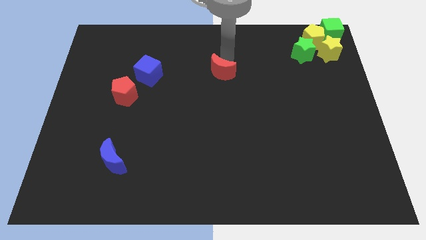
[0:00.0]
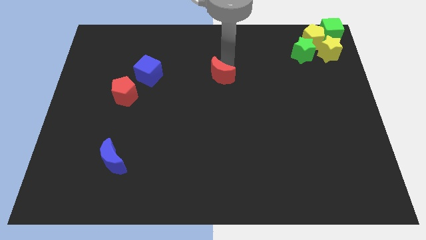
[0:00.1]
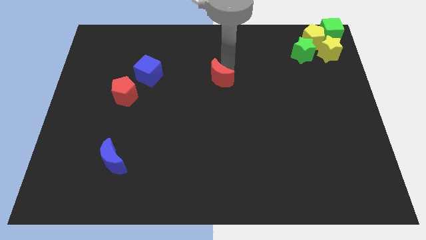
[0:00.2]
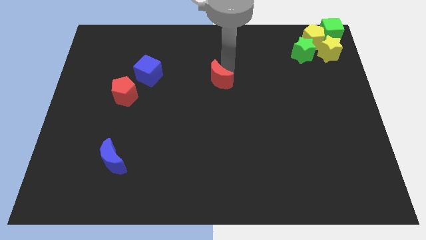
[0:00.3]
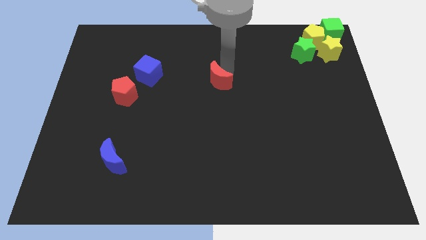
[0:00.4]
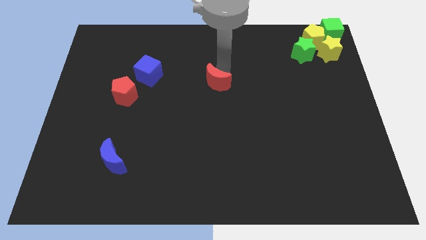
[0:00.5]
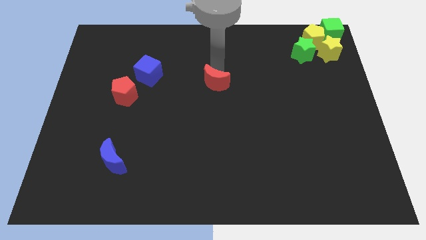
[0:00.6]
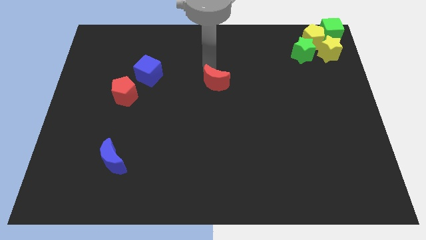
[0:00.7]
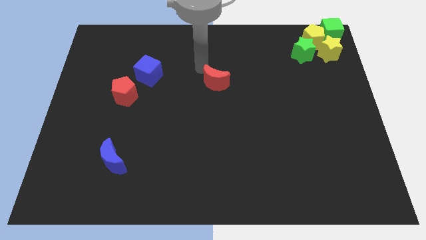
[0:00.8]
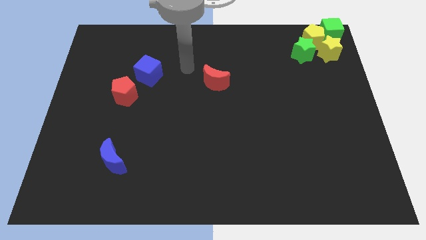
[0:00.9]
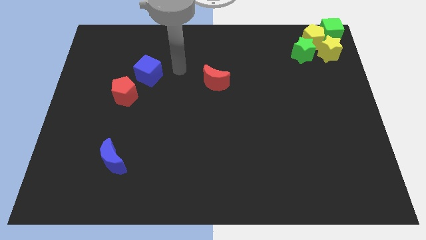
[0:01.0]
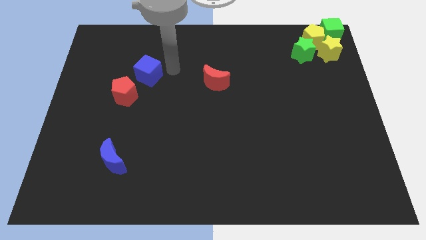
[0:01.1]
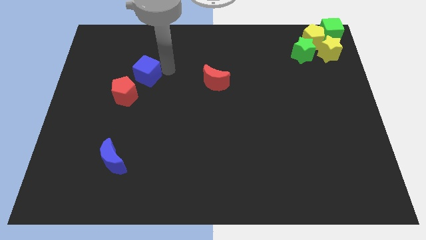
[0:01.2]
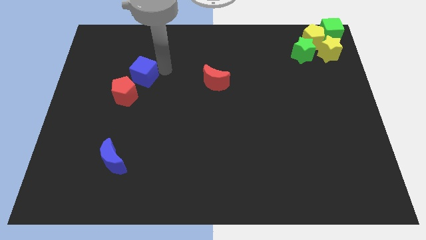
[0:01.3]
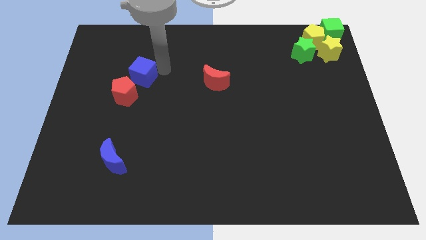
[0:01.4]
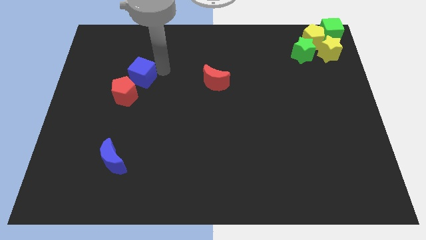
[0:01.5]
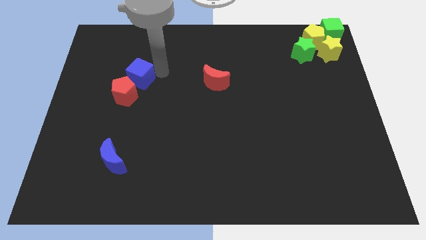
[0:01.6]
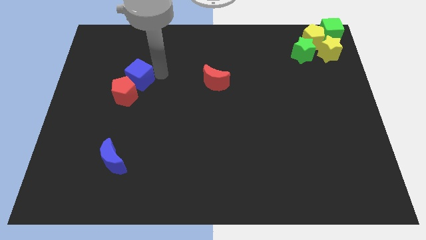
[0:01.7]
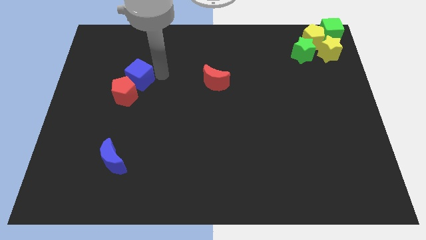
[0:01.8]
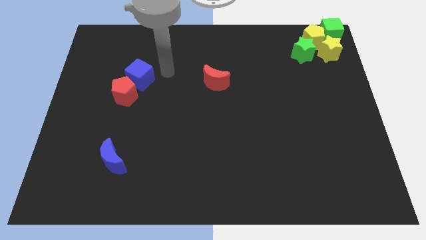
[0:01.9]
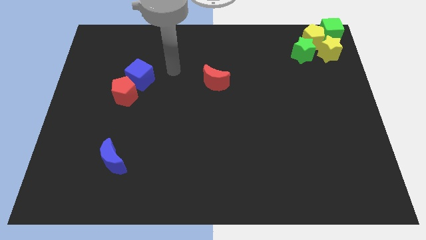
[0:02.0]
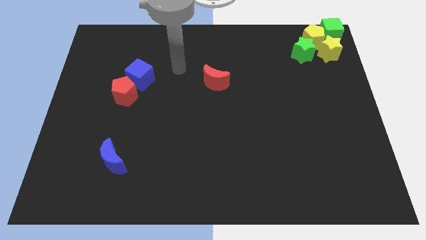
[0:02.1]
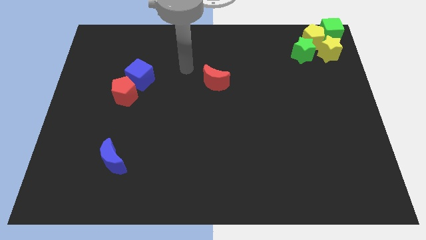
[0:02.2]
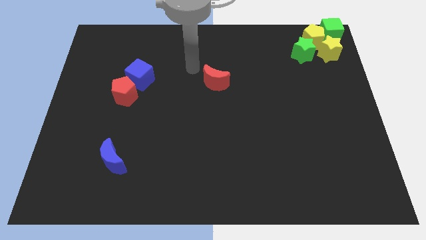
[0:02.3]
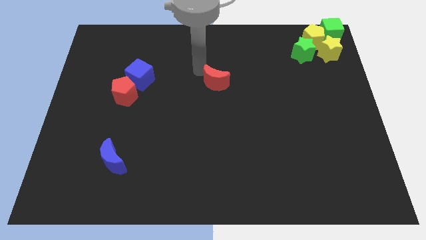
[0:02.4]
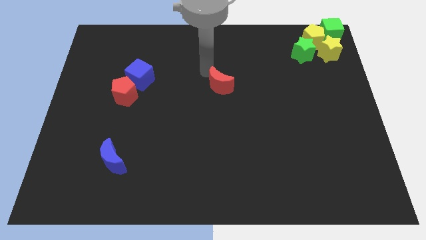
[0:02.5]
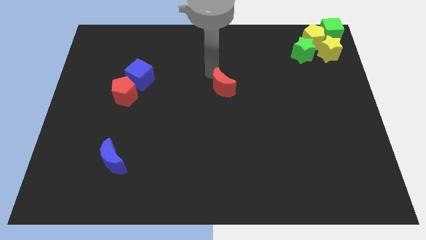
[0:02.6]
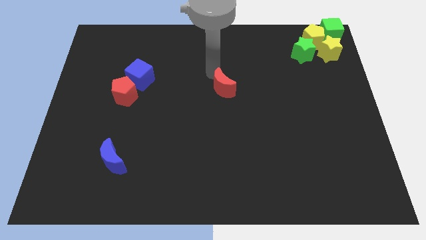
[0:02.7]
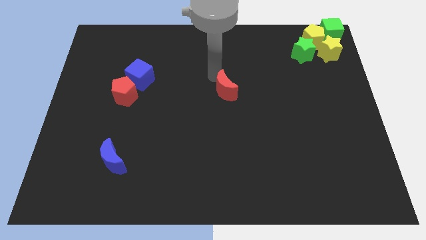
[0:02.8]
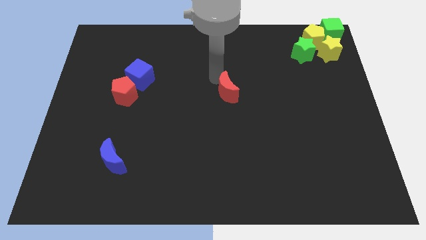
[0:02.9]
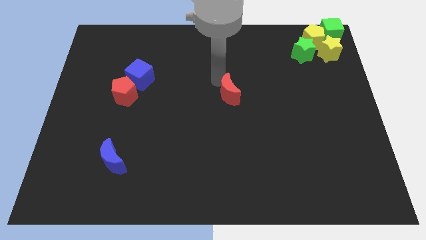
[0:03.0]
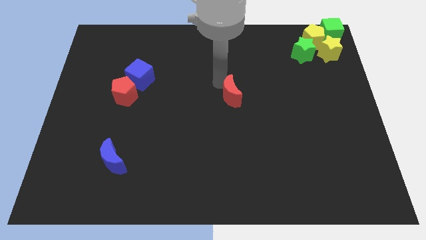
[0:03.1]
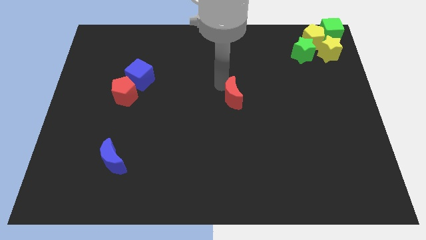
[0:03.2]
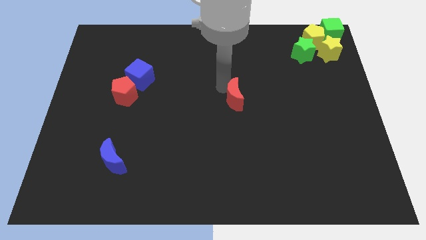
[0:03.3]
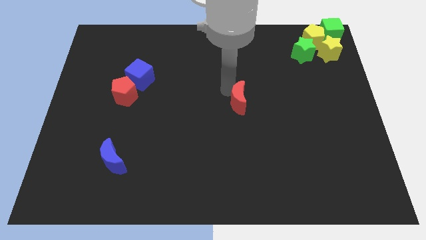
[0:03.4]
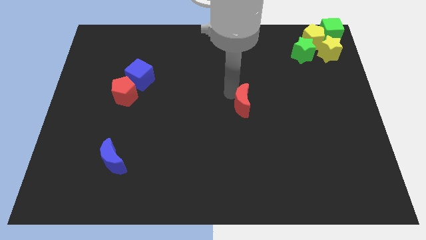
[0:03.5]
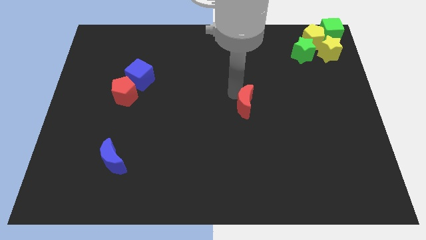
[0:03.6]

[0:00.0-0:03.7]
push the red moon to the center

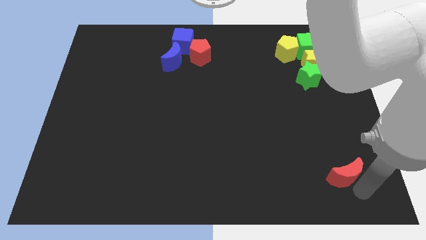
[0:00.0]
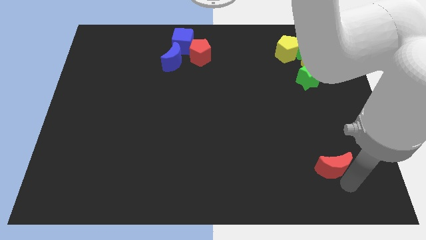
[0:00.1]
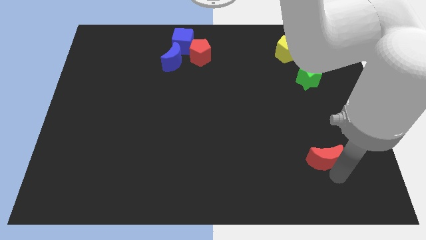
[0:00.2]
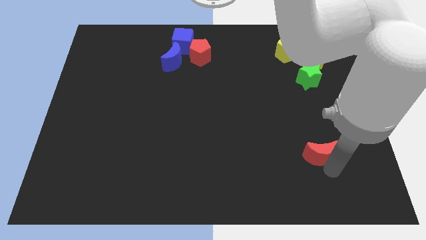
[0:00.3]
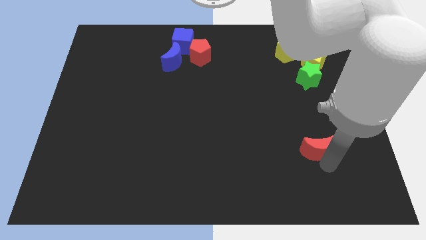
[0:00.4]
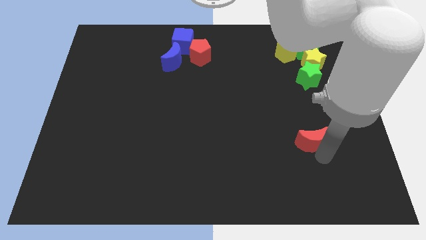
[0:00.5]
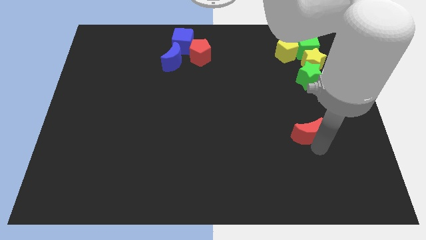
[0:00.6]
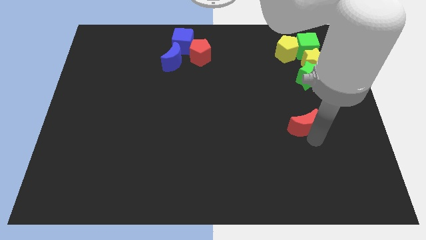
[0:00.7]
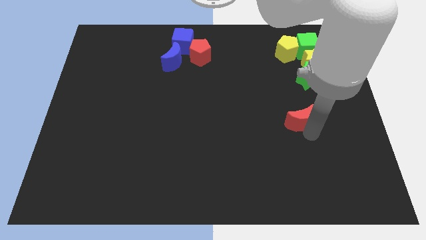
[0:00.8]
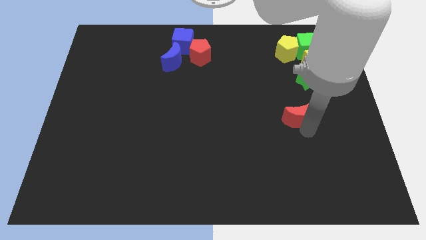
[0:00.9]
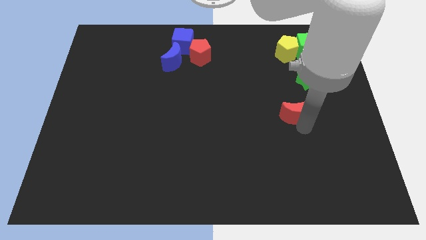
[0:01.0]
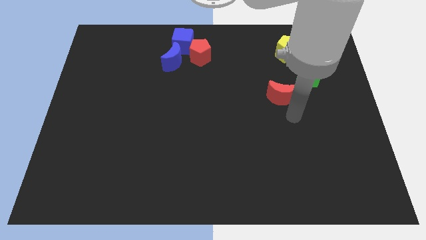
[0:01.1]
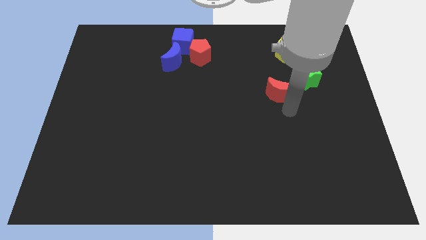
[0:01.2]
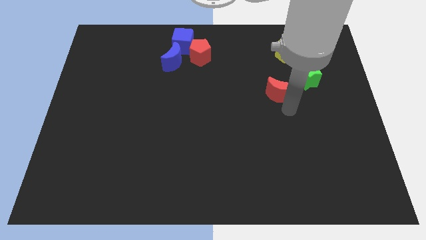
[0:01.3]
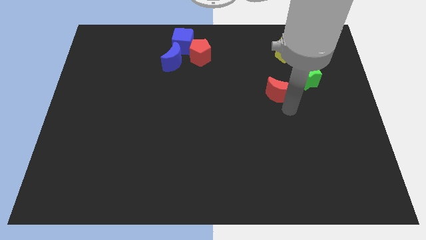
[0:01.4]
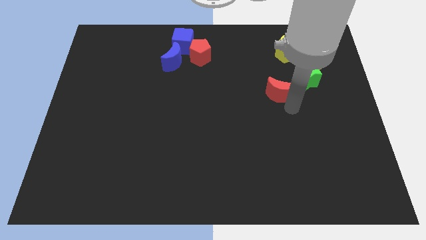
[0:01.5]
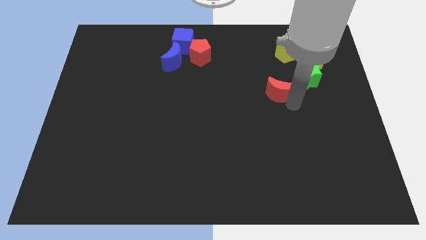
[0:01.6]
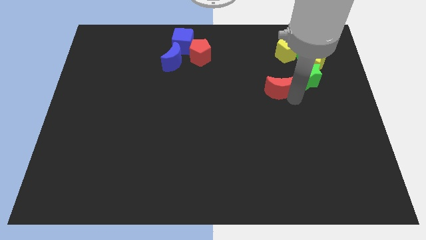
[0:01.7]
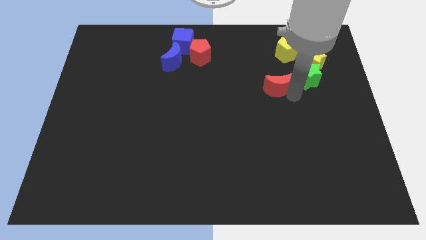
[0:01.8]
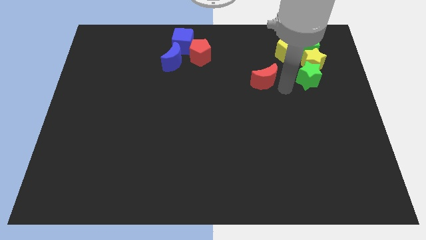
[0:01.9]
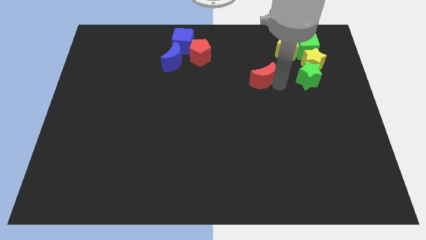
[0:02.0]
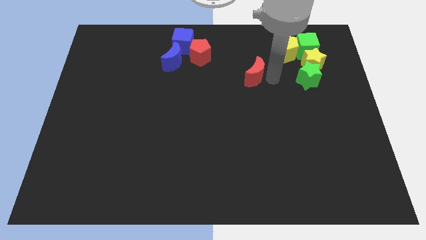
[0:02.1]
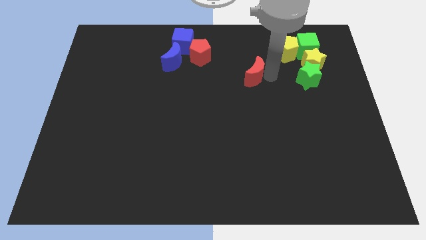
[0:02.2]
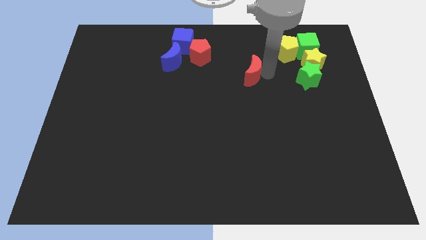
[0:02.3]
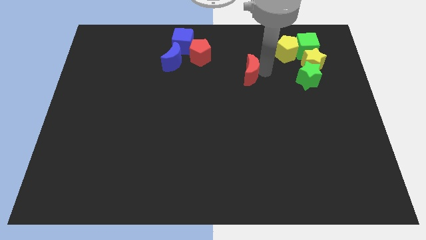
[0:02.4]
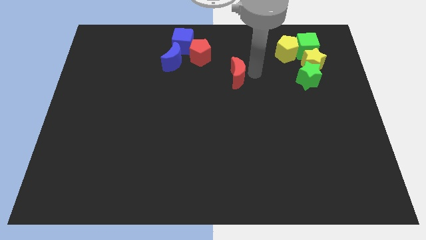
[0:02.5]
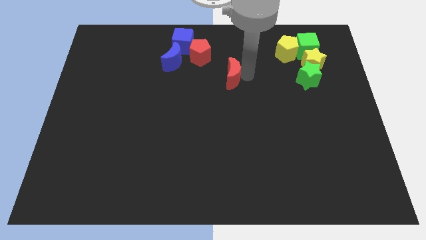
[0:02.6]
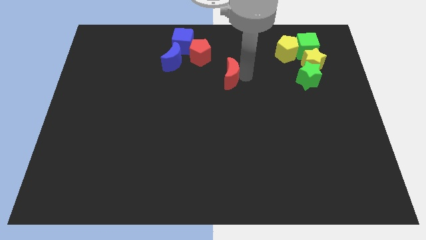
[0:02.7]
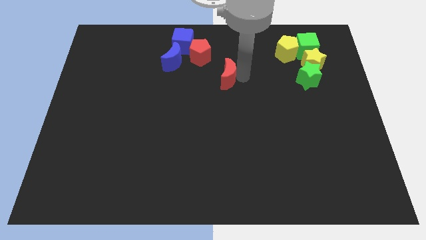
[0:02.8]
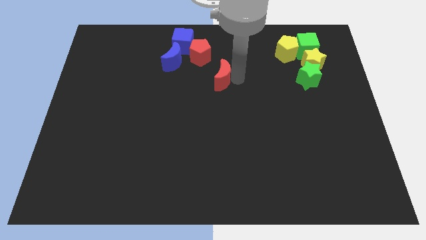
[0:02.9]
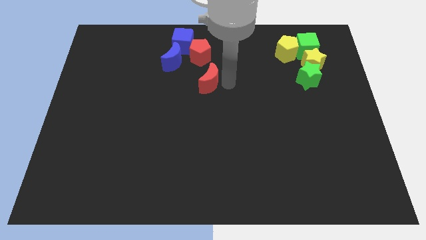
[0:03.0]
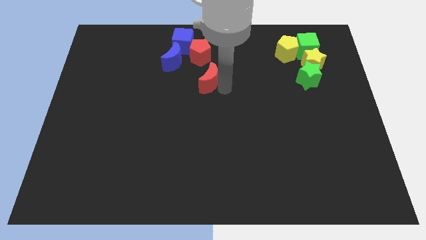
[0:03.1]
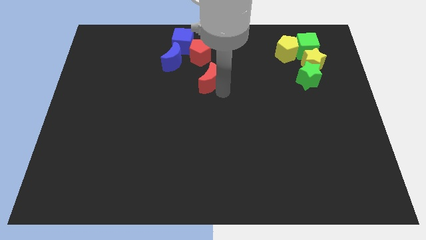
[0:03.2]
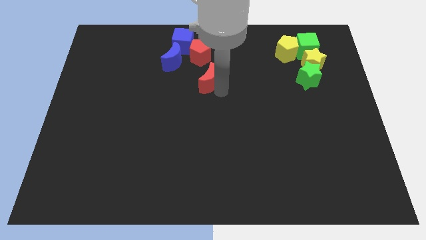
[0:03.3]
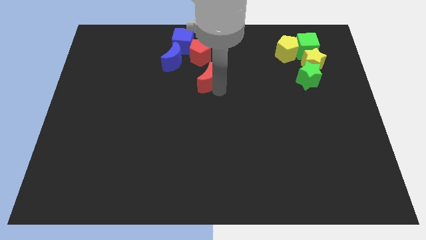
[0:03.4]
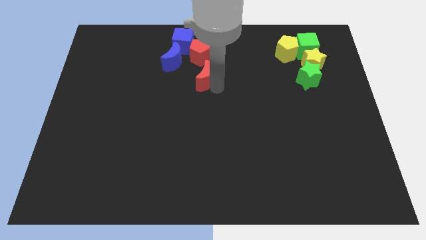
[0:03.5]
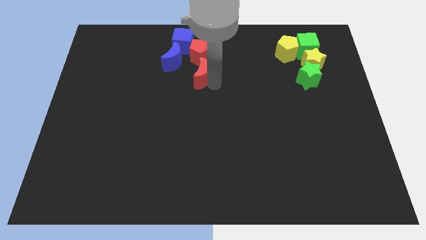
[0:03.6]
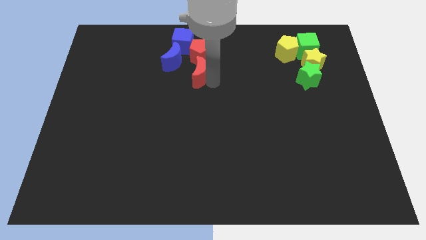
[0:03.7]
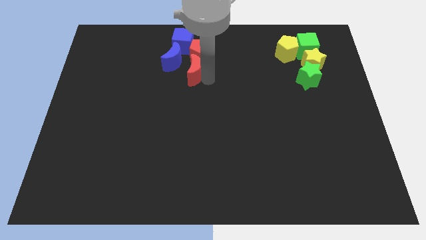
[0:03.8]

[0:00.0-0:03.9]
push the red moon below the red pentagon

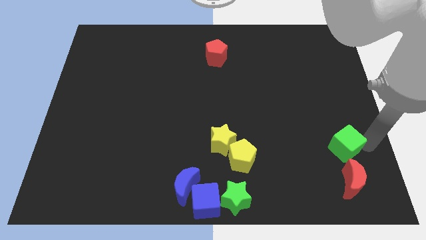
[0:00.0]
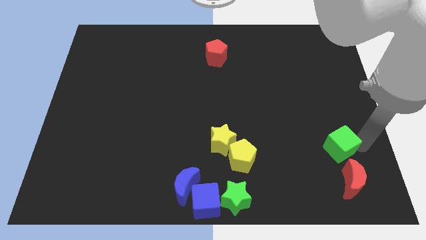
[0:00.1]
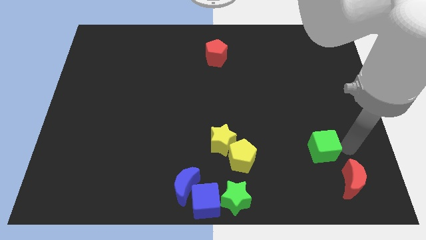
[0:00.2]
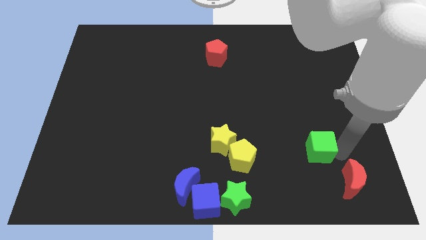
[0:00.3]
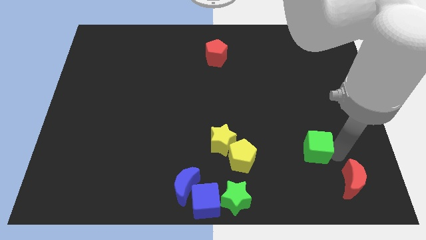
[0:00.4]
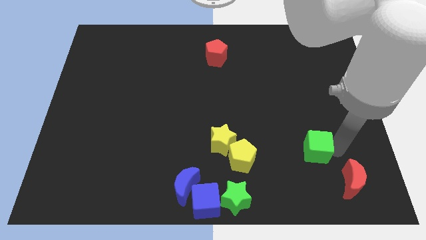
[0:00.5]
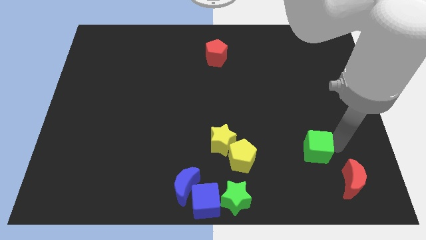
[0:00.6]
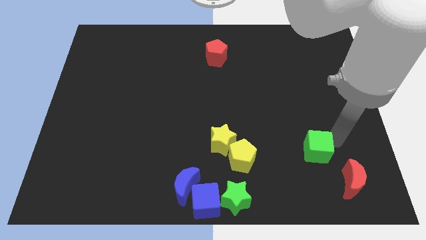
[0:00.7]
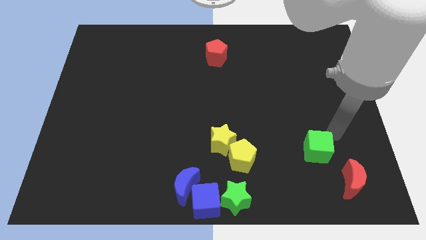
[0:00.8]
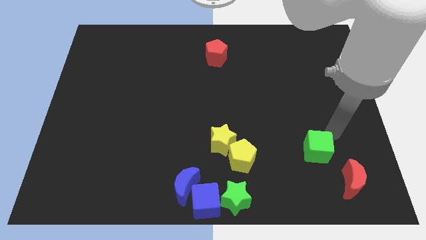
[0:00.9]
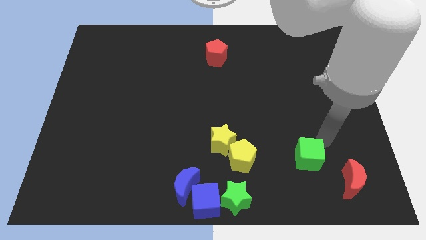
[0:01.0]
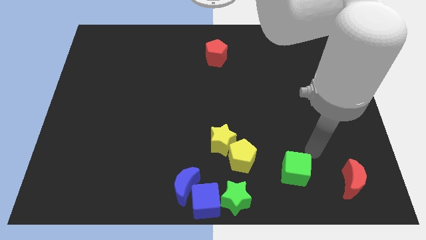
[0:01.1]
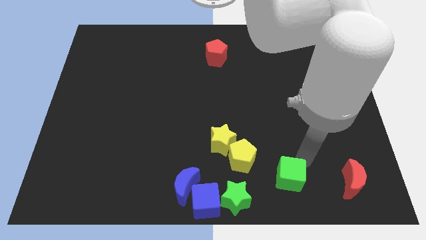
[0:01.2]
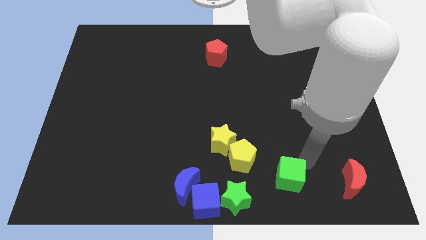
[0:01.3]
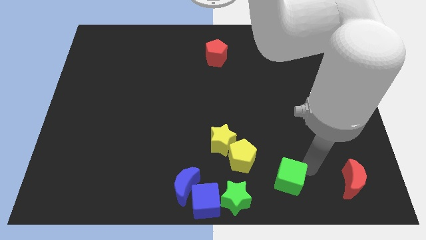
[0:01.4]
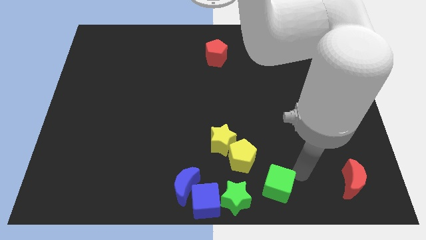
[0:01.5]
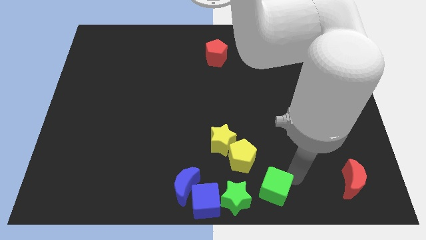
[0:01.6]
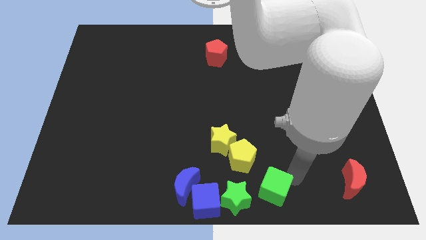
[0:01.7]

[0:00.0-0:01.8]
push the green cube towards the green star
